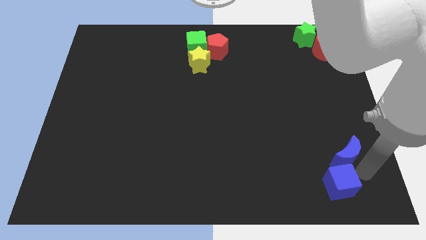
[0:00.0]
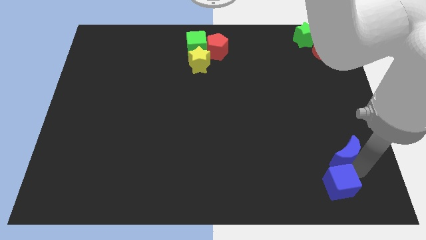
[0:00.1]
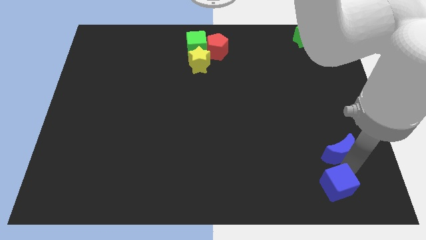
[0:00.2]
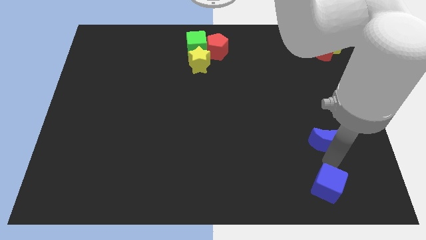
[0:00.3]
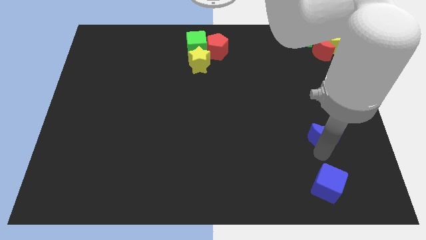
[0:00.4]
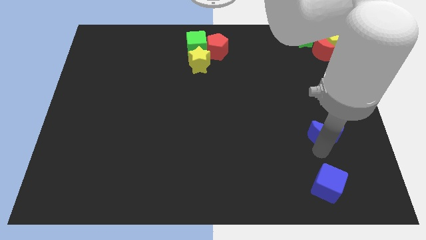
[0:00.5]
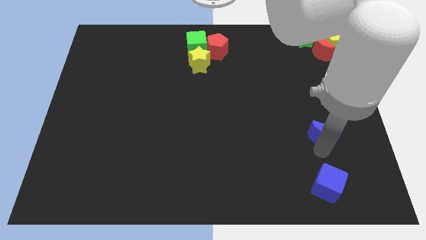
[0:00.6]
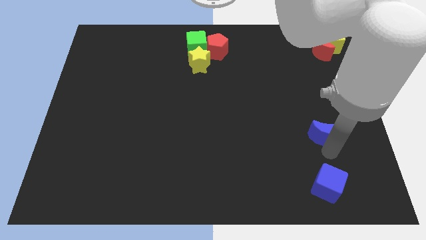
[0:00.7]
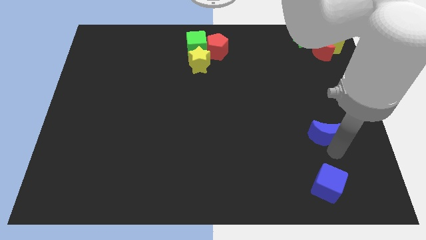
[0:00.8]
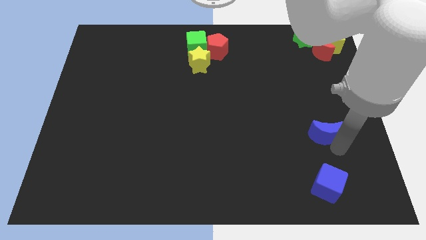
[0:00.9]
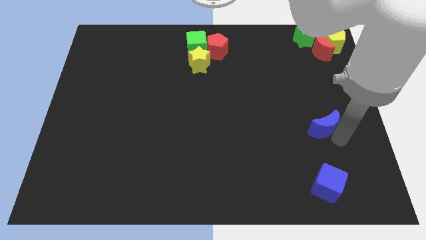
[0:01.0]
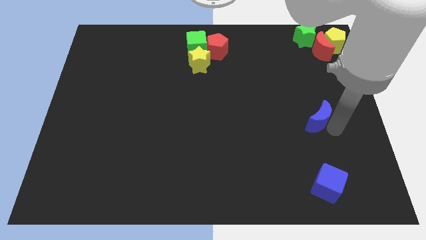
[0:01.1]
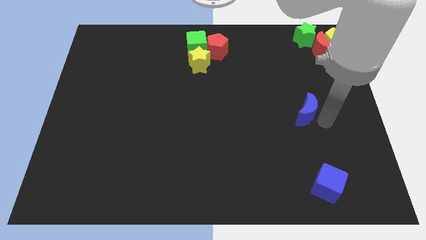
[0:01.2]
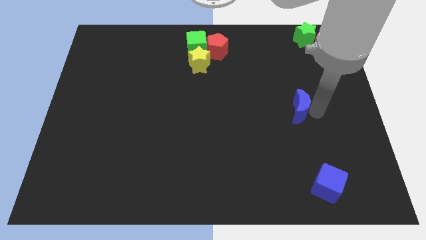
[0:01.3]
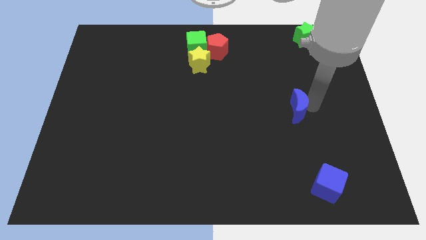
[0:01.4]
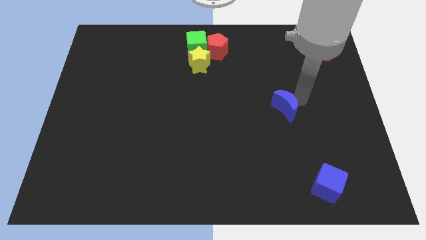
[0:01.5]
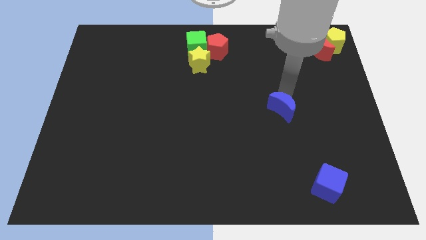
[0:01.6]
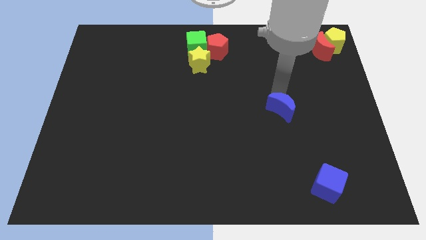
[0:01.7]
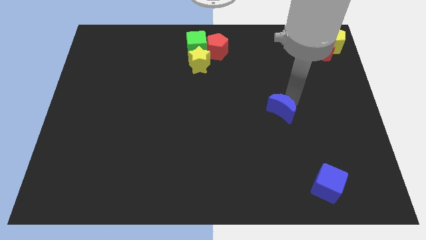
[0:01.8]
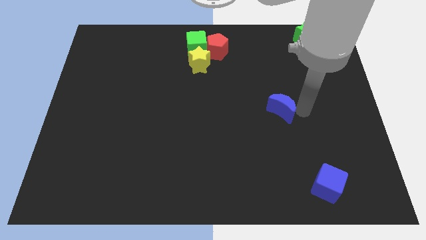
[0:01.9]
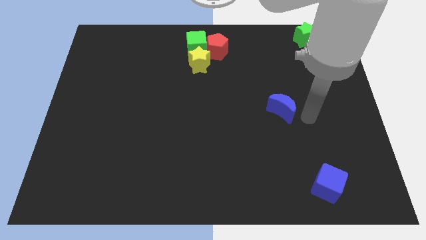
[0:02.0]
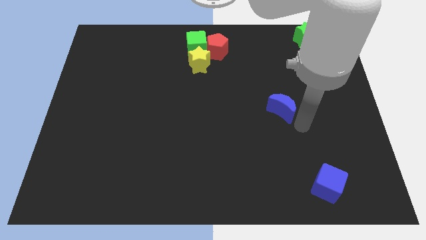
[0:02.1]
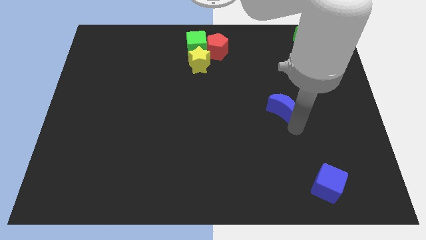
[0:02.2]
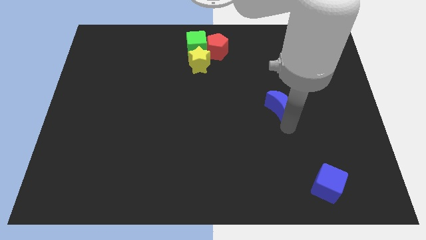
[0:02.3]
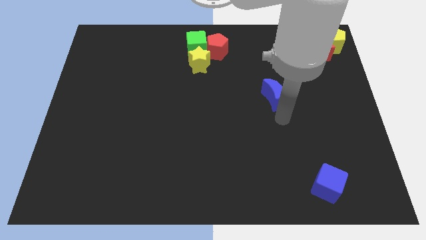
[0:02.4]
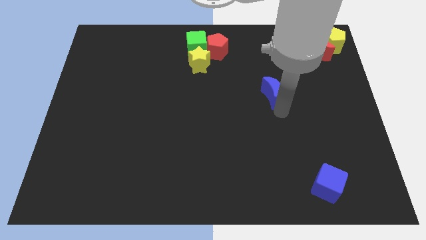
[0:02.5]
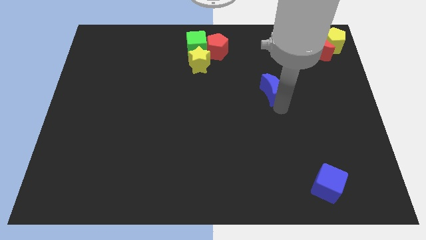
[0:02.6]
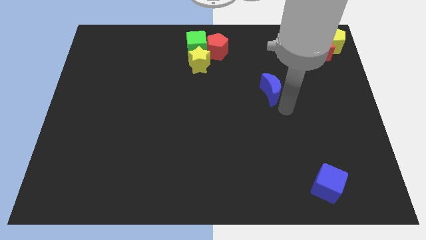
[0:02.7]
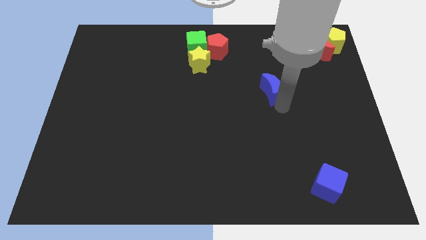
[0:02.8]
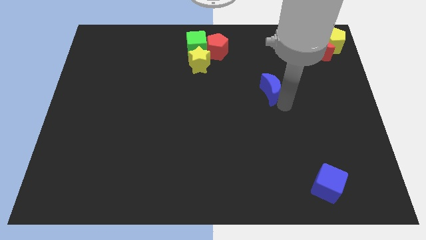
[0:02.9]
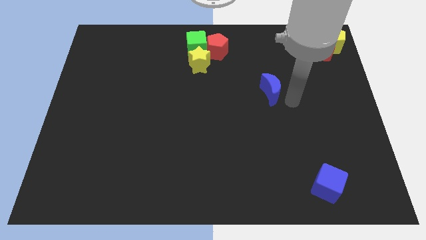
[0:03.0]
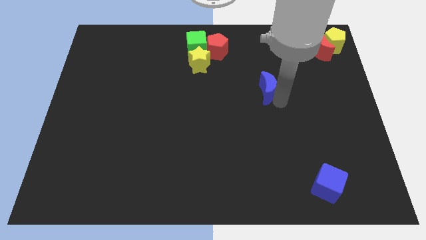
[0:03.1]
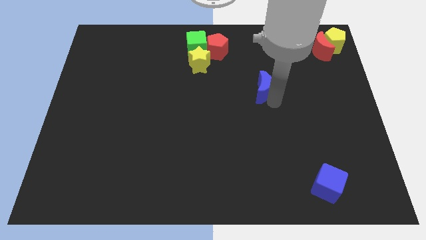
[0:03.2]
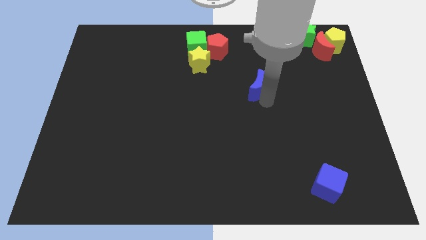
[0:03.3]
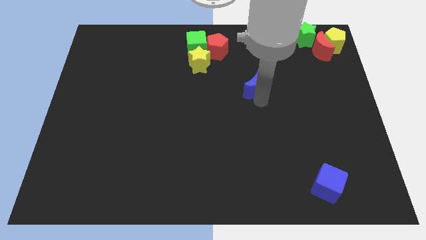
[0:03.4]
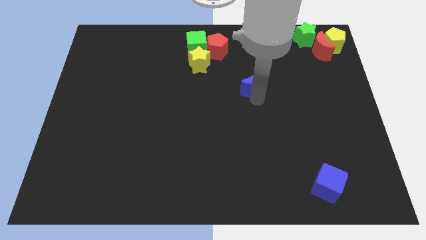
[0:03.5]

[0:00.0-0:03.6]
drag the blue crescent towards the yellow star

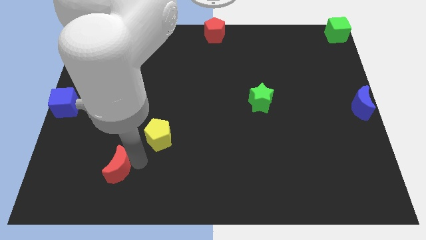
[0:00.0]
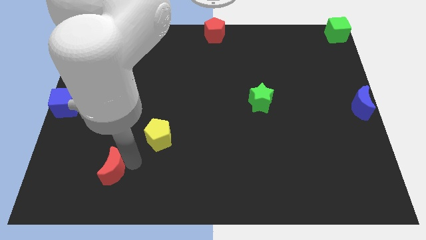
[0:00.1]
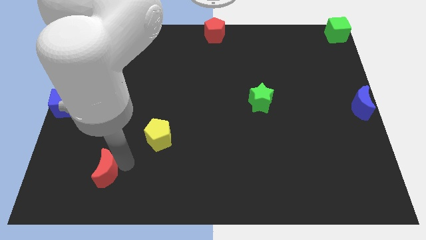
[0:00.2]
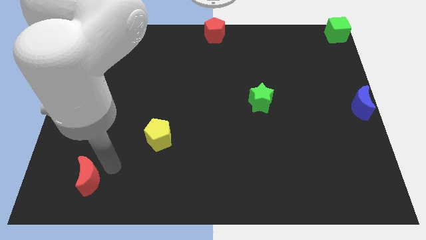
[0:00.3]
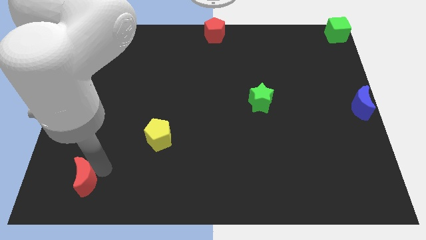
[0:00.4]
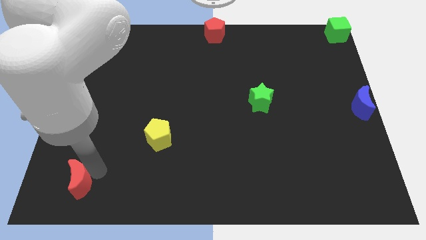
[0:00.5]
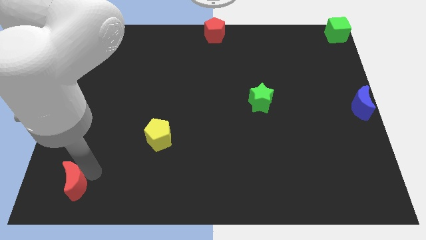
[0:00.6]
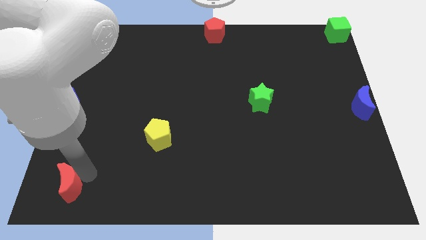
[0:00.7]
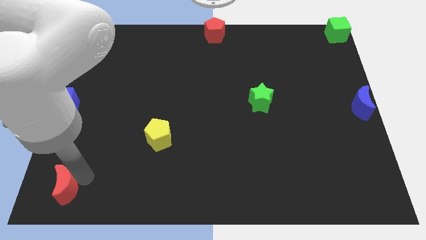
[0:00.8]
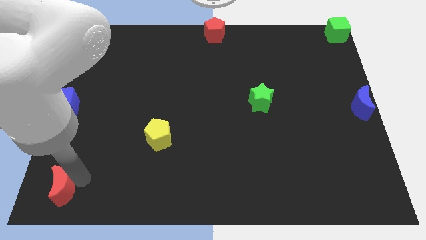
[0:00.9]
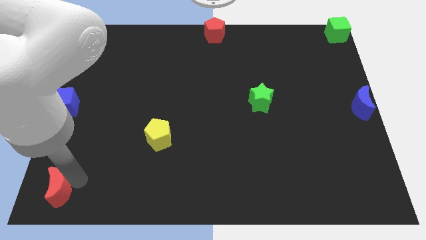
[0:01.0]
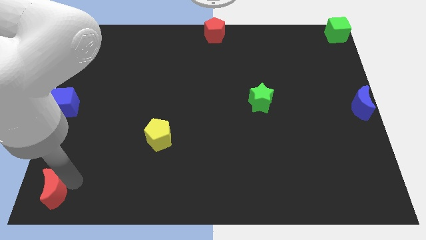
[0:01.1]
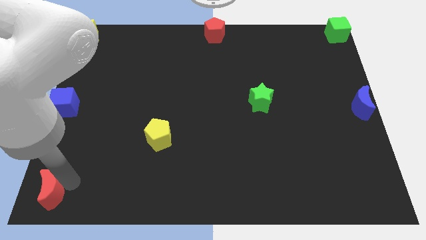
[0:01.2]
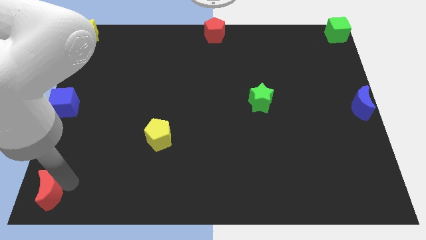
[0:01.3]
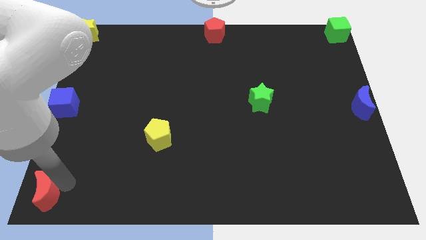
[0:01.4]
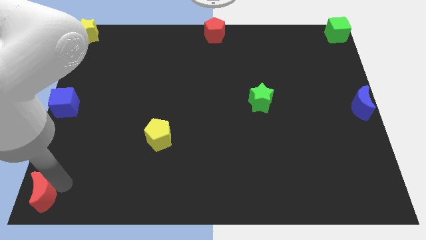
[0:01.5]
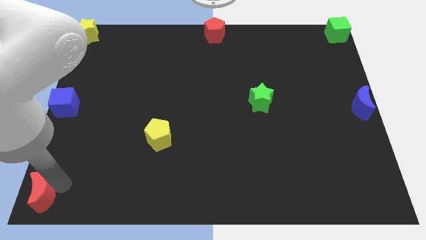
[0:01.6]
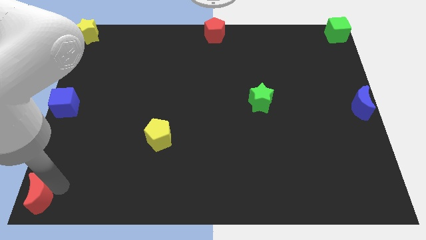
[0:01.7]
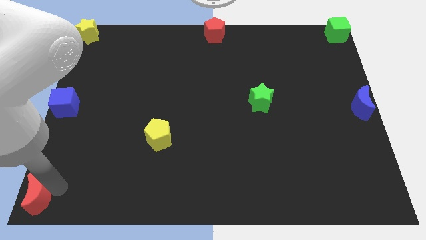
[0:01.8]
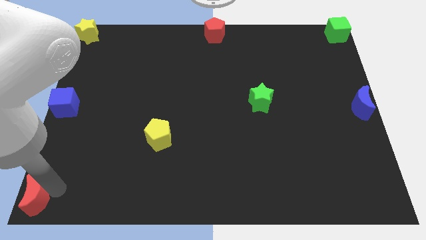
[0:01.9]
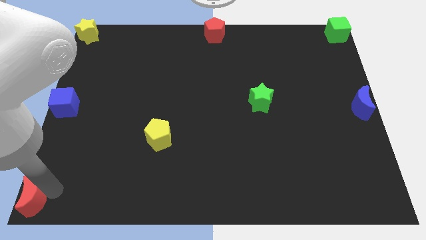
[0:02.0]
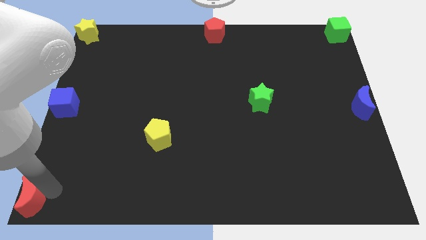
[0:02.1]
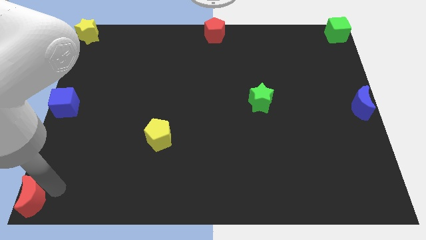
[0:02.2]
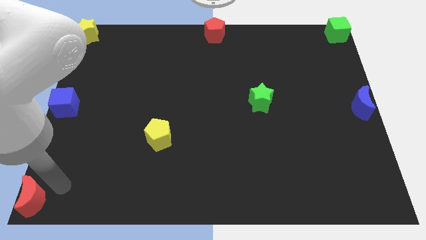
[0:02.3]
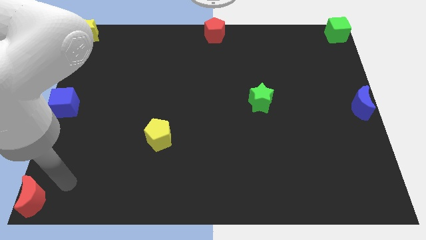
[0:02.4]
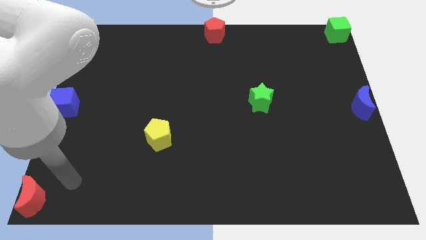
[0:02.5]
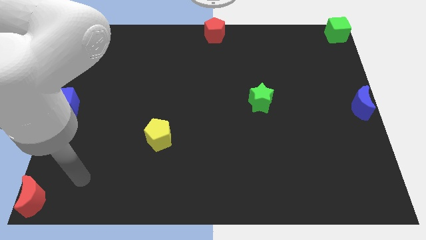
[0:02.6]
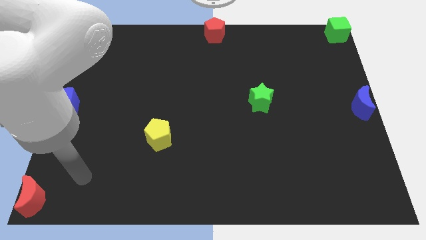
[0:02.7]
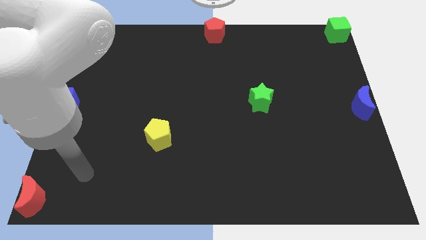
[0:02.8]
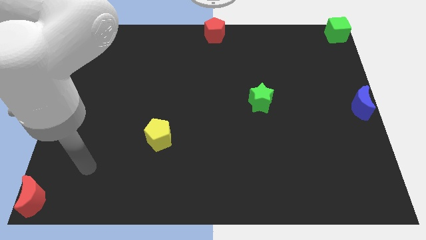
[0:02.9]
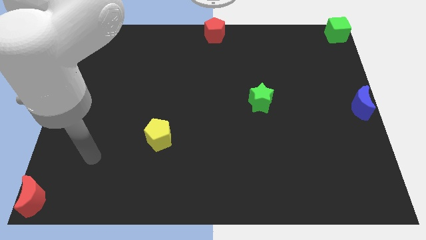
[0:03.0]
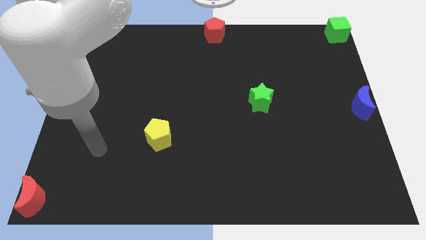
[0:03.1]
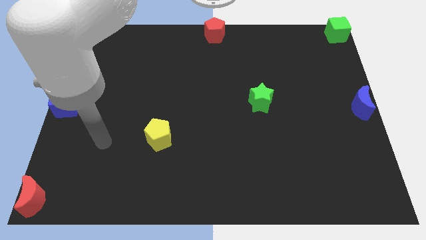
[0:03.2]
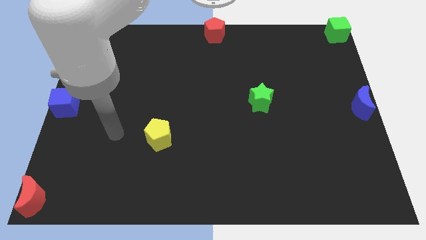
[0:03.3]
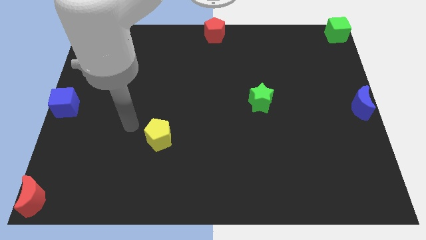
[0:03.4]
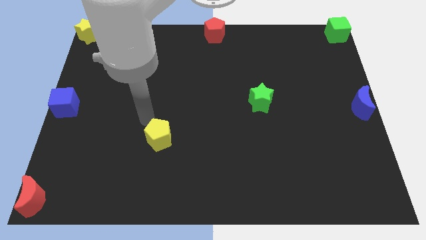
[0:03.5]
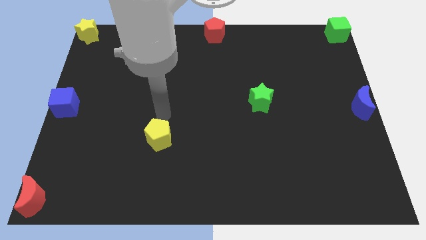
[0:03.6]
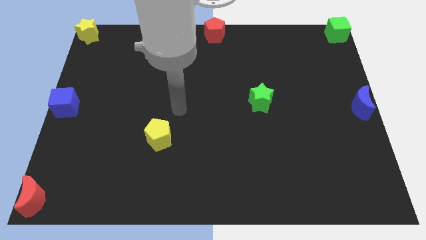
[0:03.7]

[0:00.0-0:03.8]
place red crescent to the left bottom corner

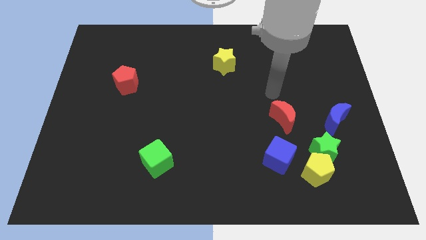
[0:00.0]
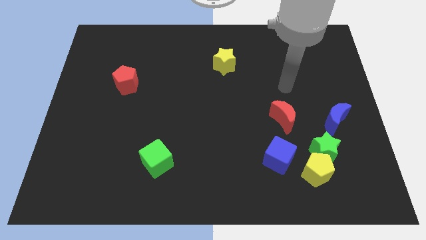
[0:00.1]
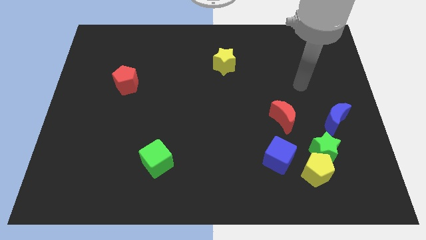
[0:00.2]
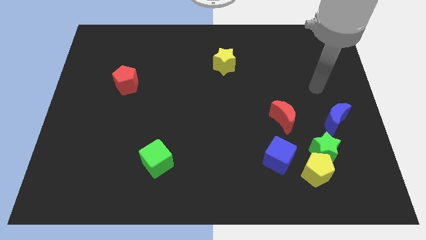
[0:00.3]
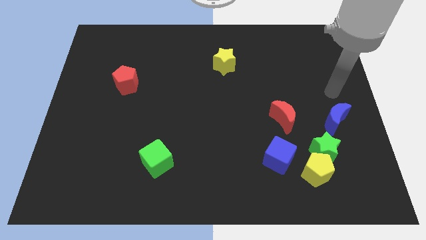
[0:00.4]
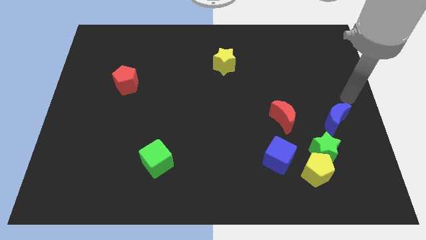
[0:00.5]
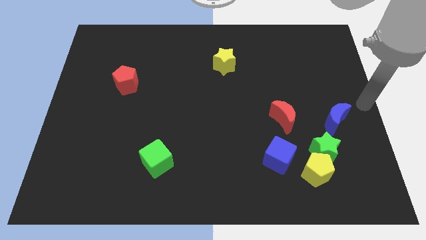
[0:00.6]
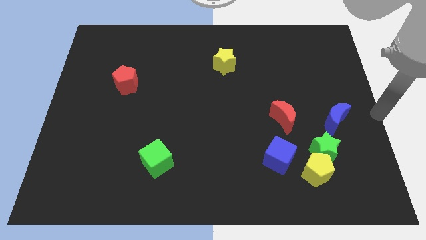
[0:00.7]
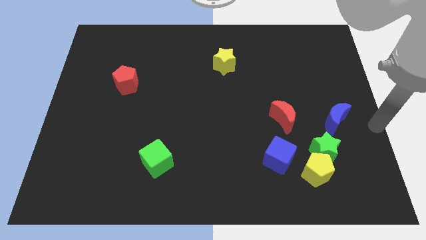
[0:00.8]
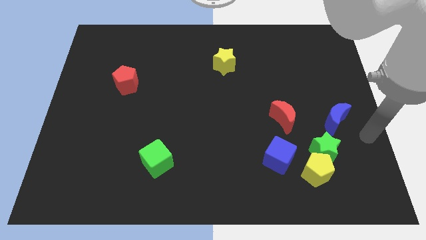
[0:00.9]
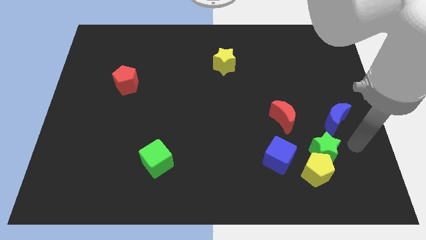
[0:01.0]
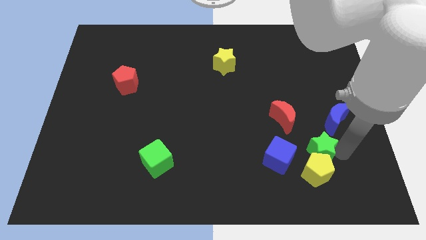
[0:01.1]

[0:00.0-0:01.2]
point your arm at the right of the green star

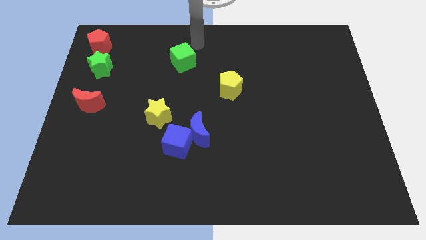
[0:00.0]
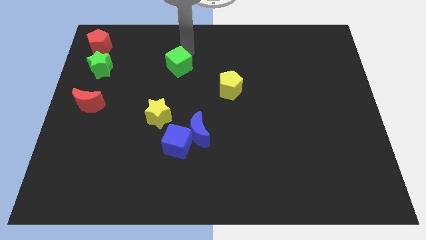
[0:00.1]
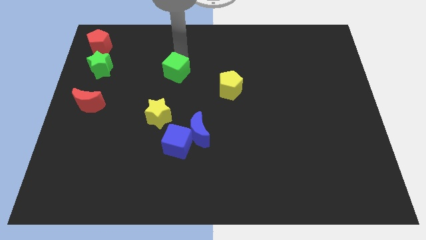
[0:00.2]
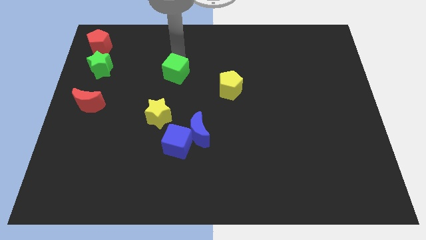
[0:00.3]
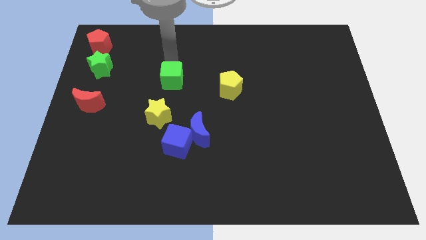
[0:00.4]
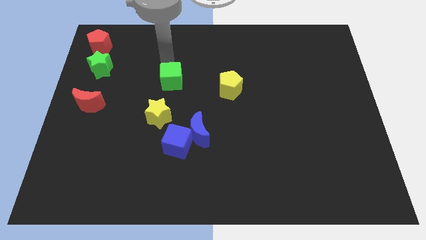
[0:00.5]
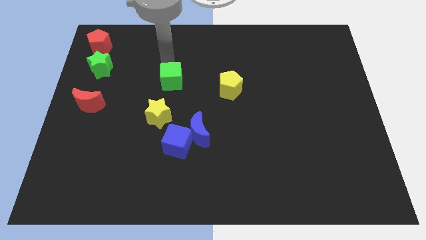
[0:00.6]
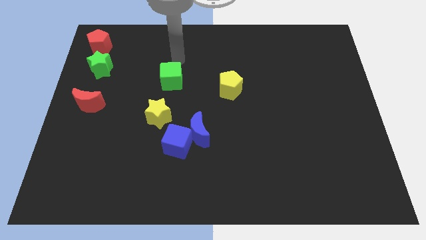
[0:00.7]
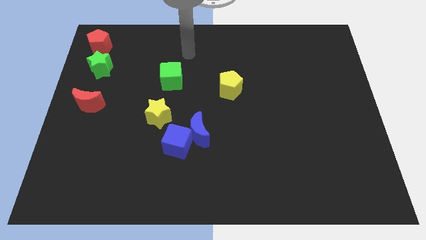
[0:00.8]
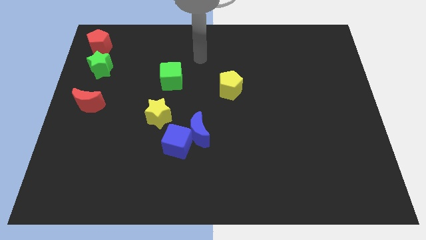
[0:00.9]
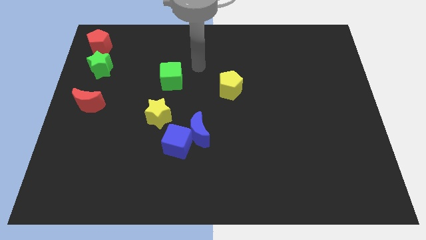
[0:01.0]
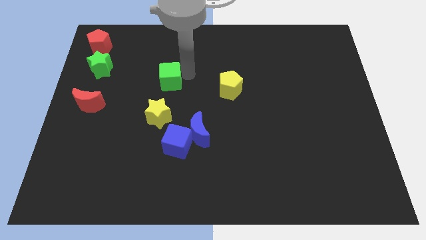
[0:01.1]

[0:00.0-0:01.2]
place green cube to the top side of the yellow star
